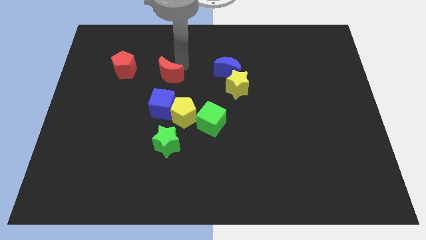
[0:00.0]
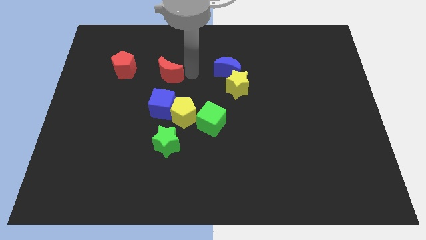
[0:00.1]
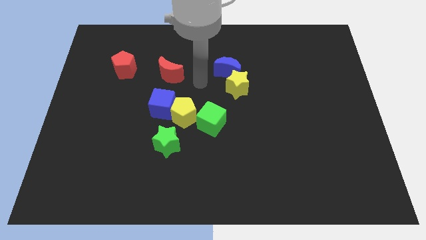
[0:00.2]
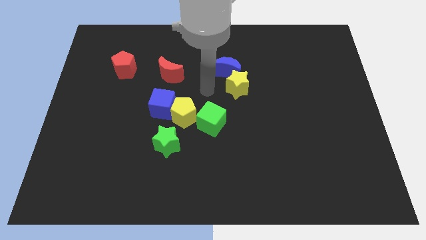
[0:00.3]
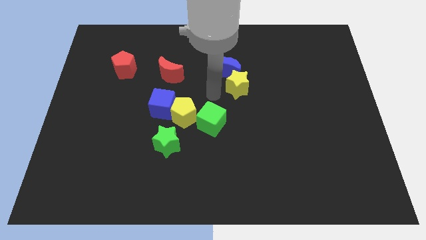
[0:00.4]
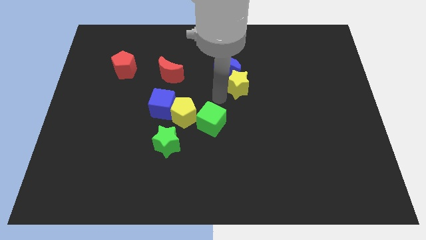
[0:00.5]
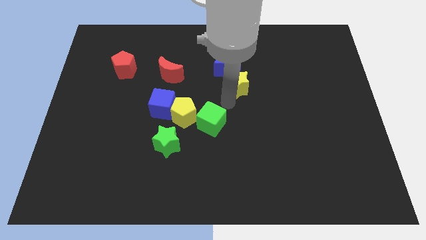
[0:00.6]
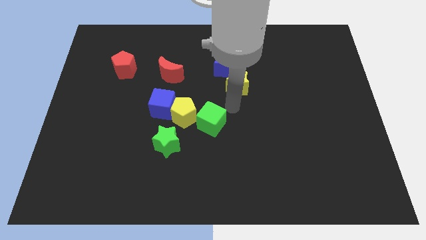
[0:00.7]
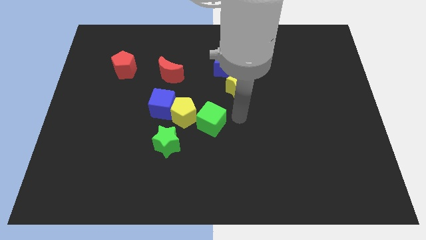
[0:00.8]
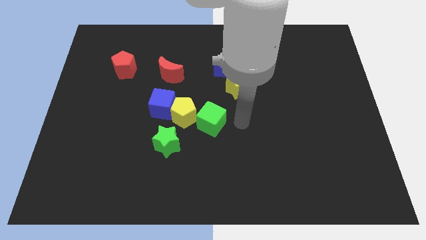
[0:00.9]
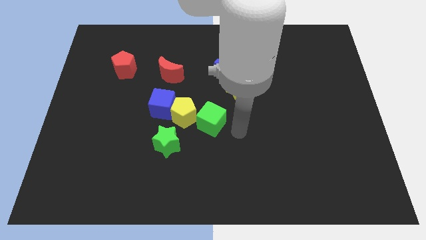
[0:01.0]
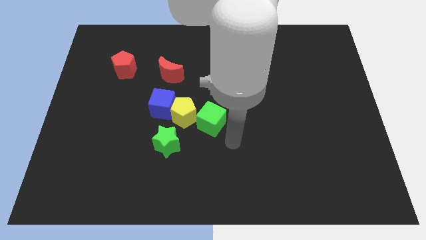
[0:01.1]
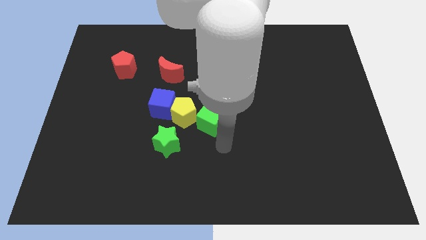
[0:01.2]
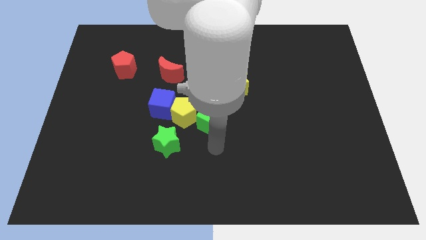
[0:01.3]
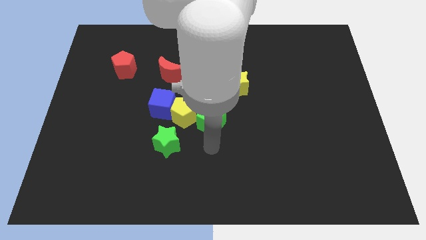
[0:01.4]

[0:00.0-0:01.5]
point your arm below the green cube

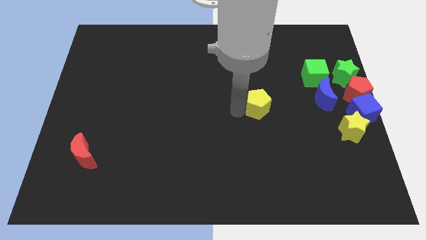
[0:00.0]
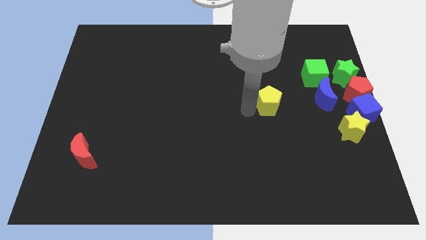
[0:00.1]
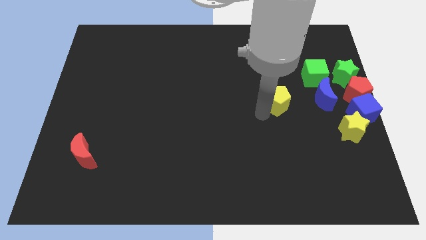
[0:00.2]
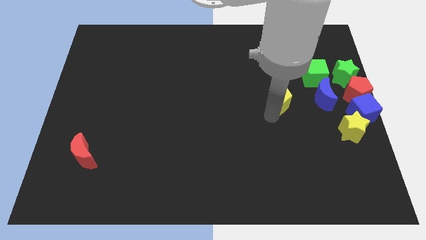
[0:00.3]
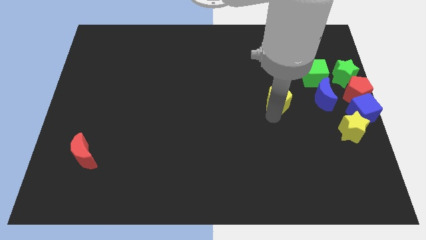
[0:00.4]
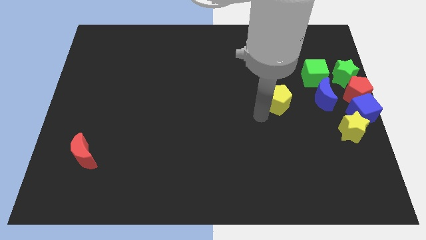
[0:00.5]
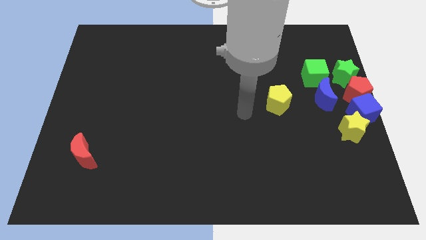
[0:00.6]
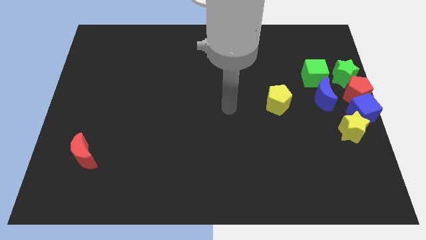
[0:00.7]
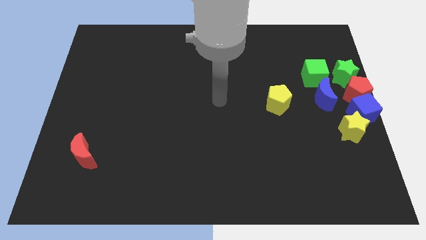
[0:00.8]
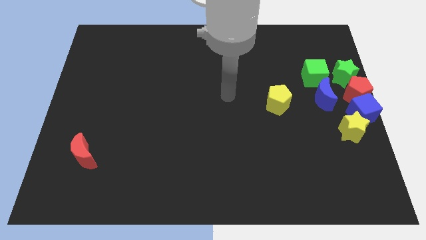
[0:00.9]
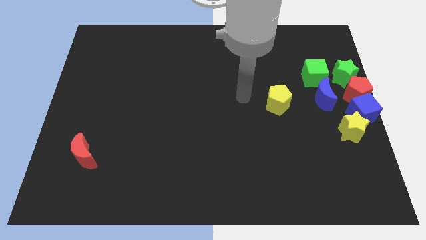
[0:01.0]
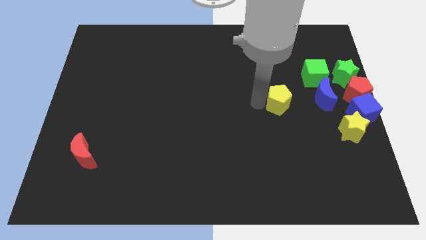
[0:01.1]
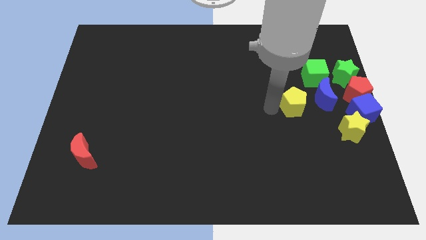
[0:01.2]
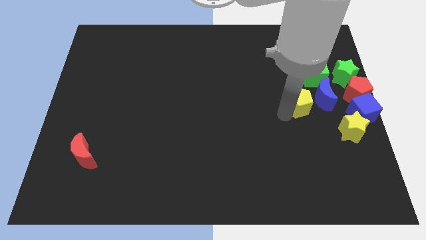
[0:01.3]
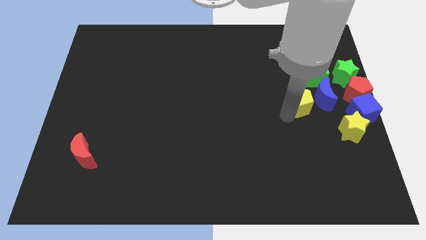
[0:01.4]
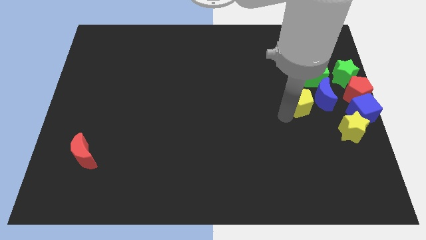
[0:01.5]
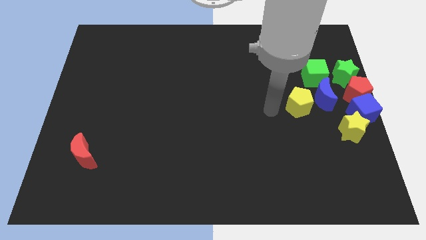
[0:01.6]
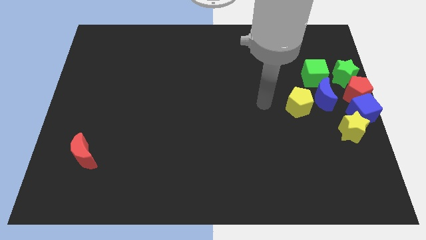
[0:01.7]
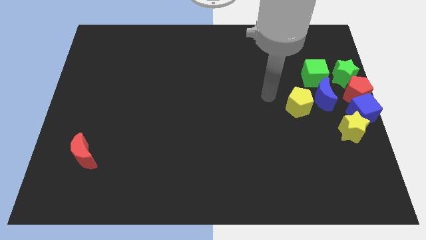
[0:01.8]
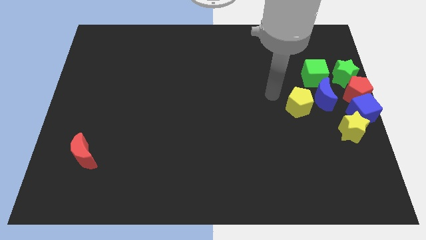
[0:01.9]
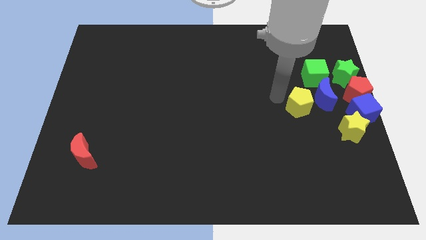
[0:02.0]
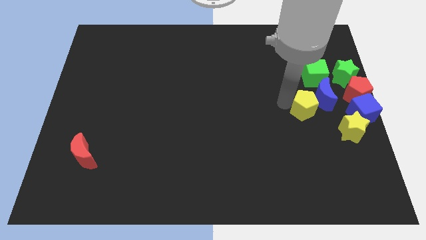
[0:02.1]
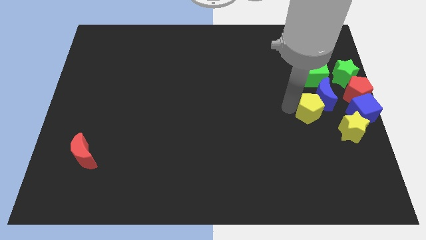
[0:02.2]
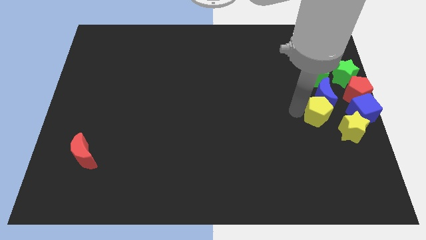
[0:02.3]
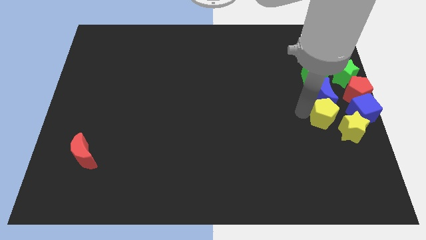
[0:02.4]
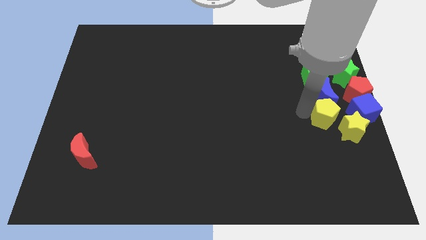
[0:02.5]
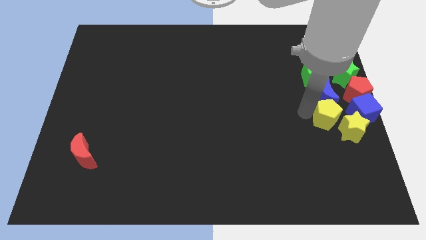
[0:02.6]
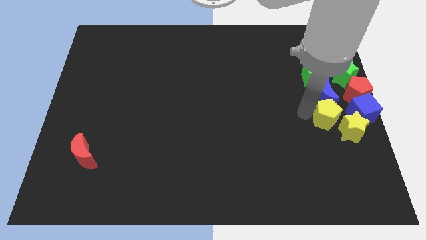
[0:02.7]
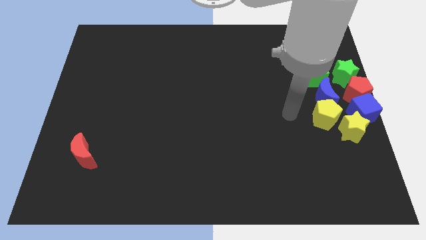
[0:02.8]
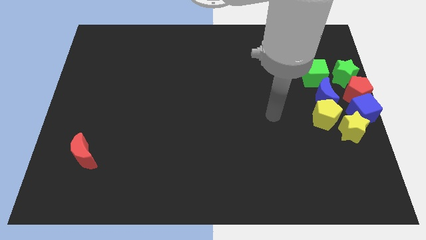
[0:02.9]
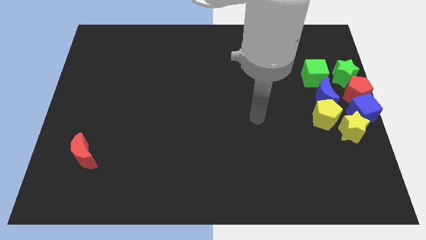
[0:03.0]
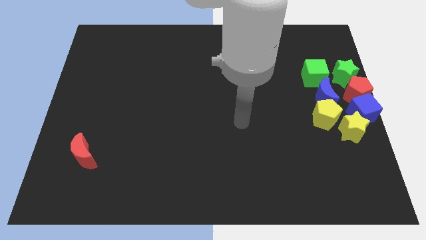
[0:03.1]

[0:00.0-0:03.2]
push the yellow pentagon to the bottom of the blue crescent

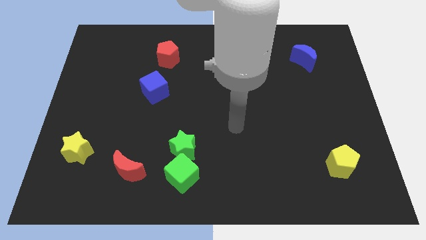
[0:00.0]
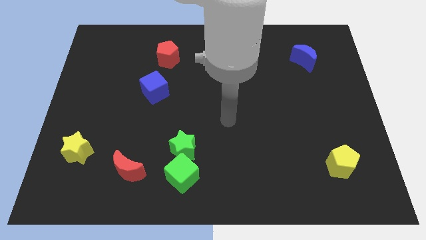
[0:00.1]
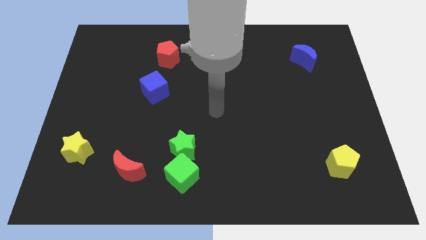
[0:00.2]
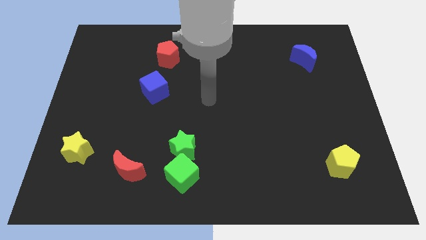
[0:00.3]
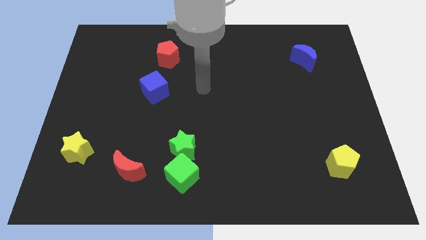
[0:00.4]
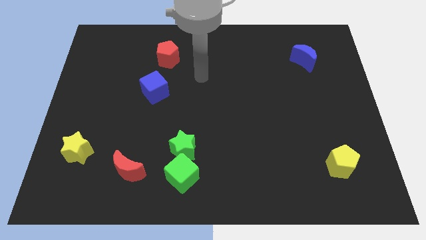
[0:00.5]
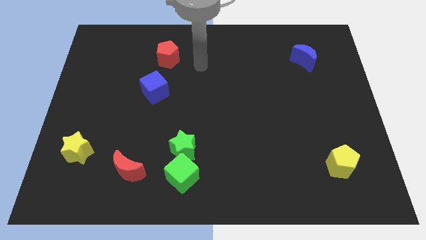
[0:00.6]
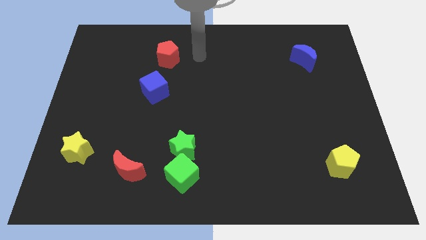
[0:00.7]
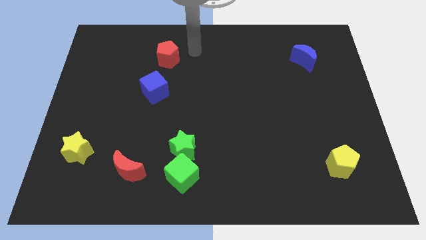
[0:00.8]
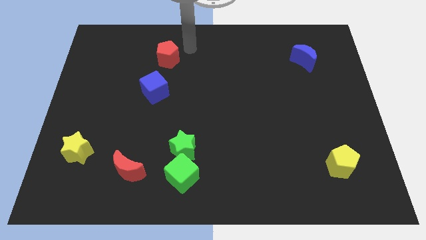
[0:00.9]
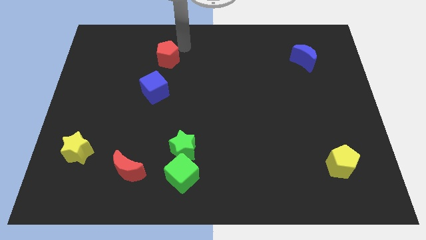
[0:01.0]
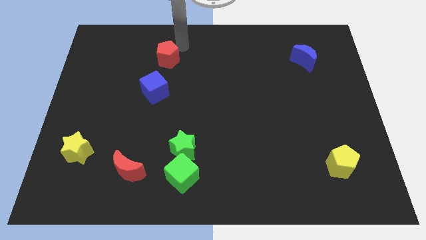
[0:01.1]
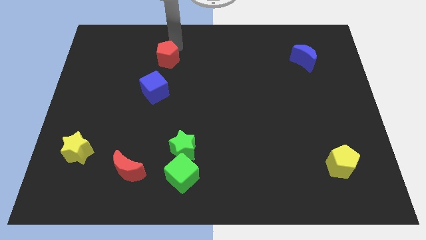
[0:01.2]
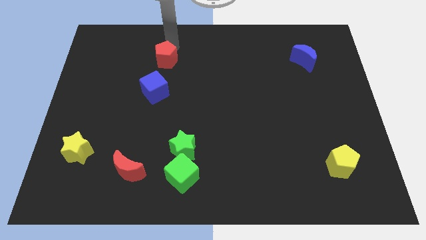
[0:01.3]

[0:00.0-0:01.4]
place your hand above the red pentagon

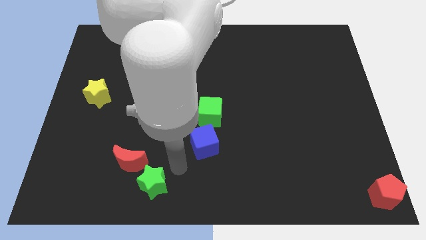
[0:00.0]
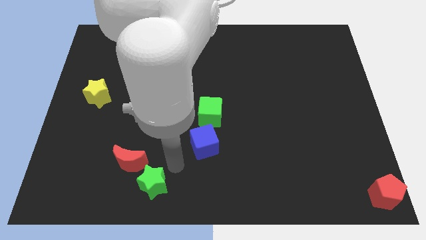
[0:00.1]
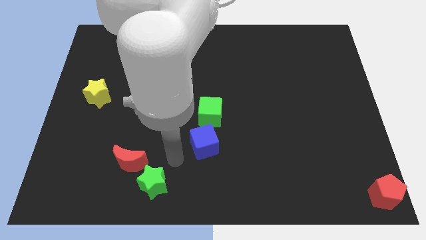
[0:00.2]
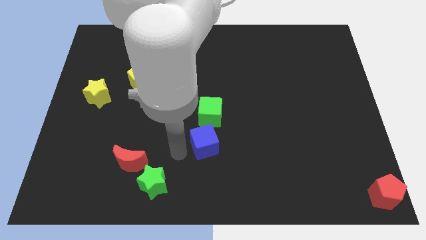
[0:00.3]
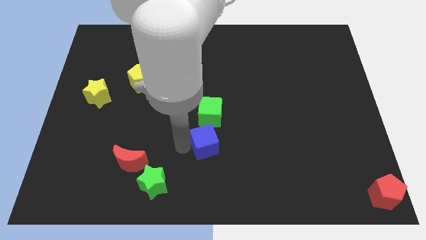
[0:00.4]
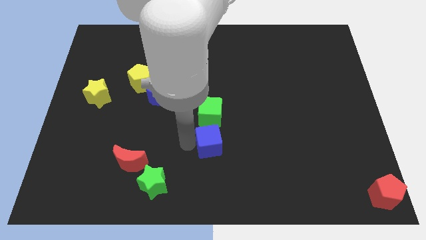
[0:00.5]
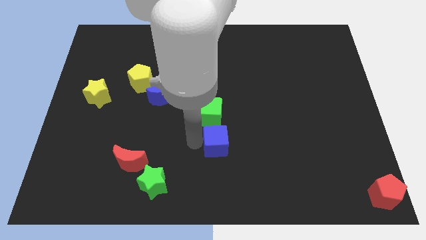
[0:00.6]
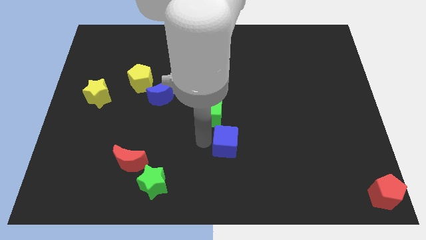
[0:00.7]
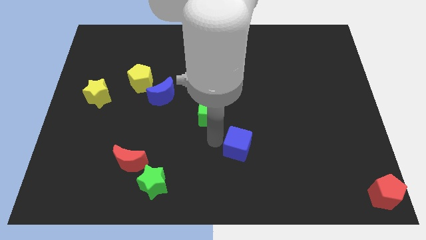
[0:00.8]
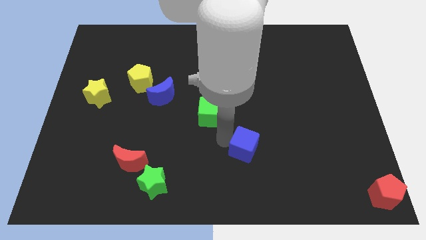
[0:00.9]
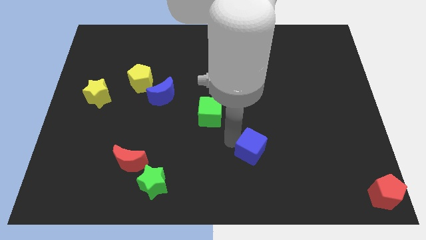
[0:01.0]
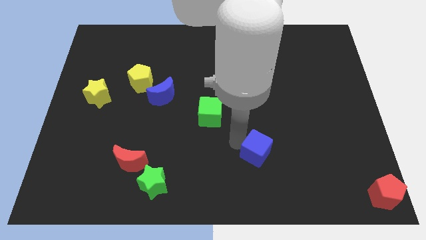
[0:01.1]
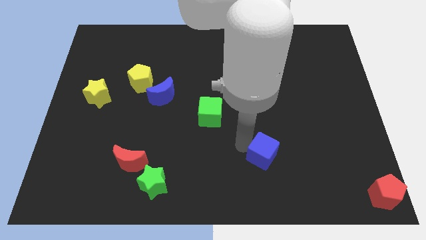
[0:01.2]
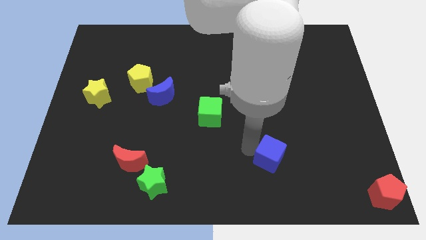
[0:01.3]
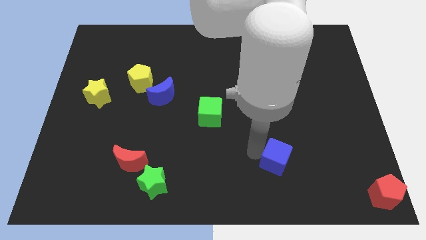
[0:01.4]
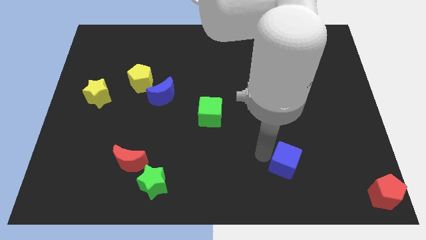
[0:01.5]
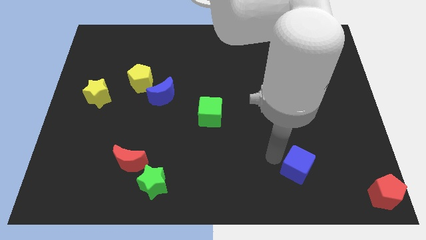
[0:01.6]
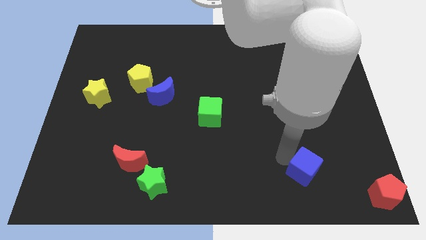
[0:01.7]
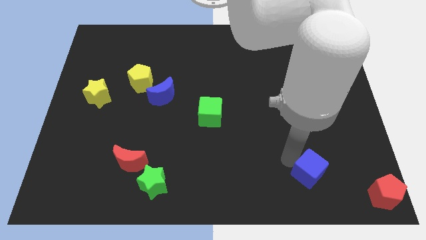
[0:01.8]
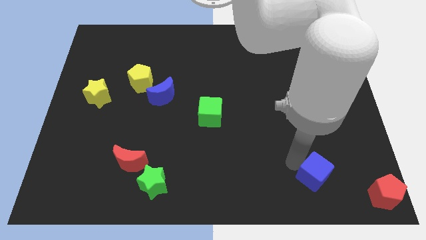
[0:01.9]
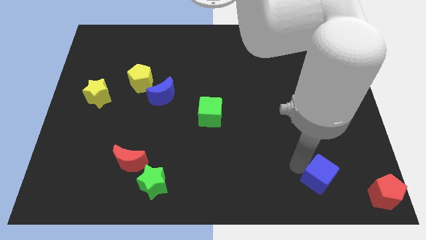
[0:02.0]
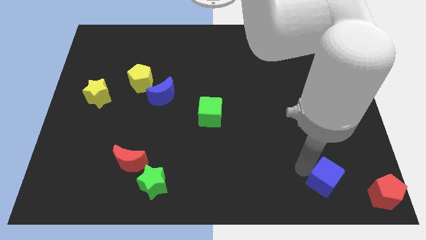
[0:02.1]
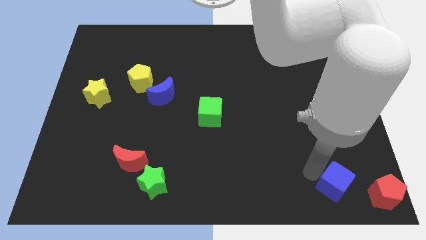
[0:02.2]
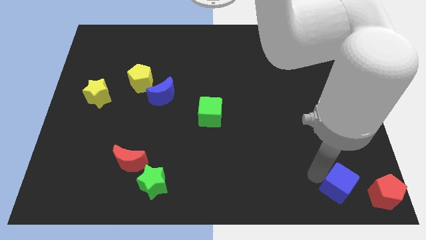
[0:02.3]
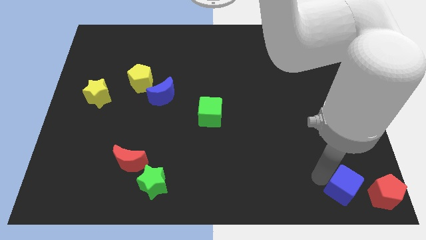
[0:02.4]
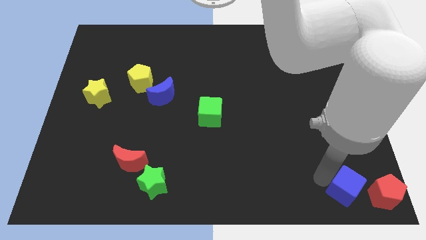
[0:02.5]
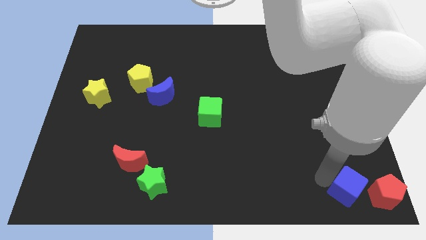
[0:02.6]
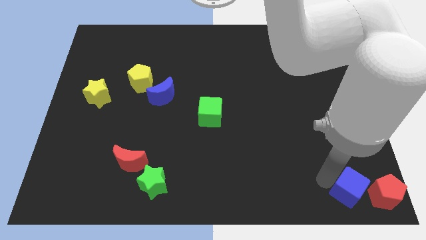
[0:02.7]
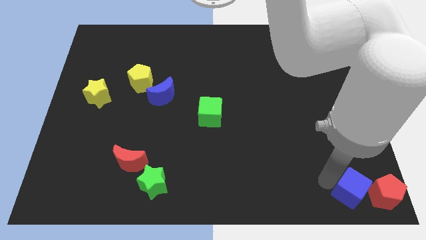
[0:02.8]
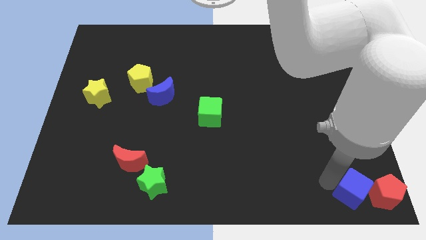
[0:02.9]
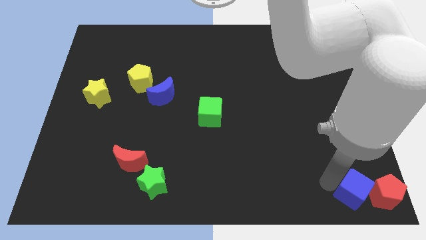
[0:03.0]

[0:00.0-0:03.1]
slide the blue cube close to the left side of the red pentagon
